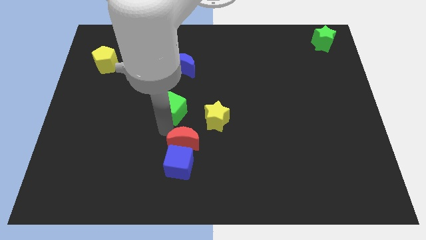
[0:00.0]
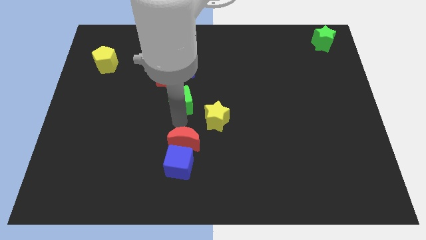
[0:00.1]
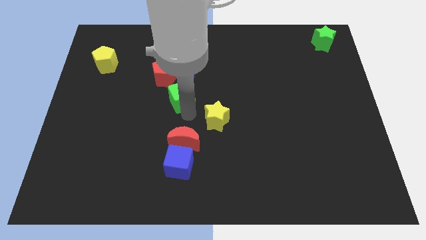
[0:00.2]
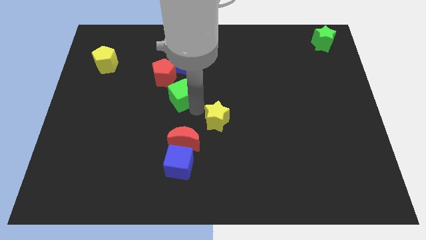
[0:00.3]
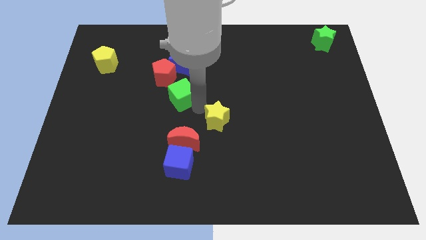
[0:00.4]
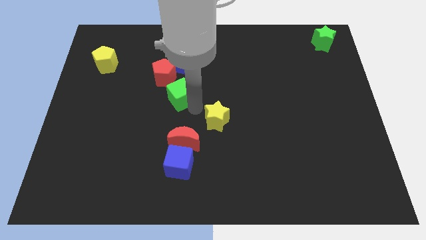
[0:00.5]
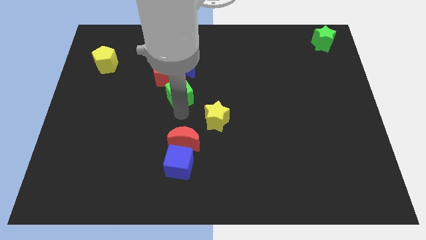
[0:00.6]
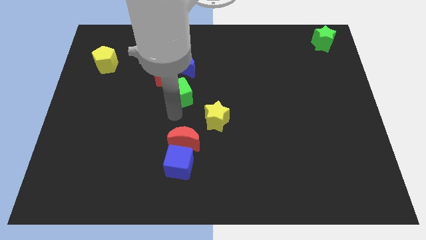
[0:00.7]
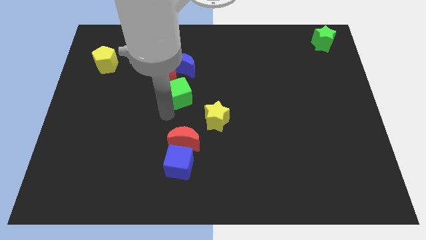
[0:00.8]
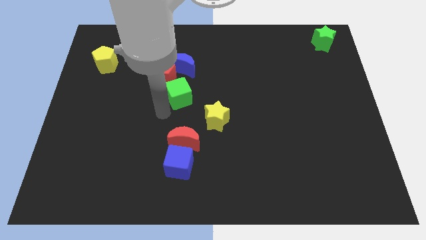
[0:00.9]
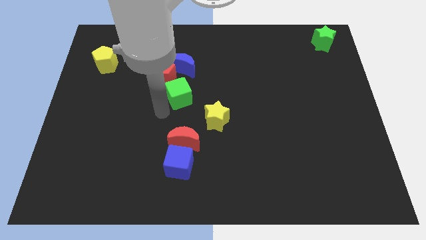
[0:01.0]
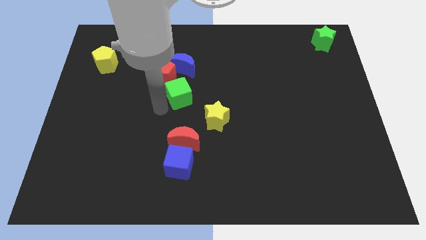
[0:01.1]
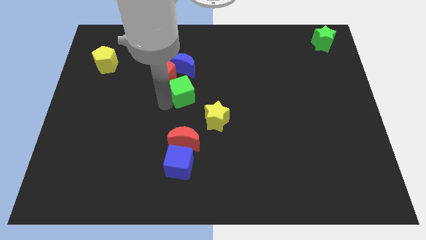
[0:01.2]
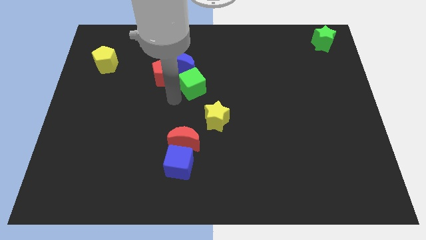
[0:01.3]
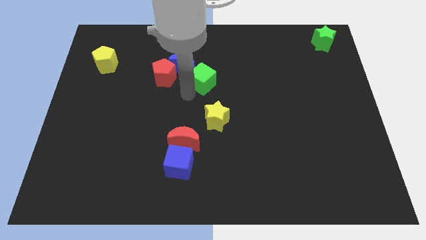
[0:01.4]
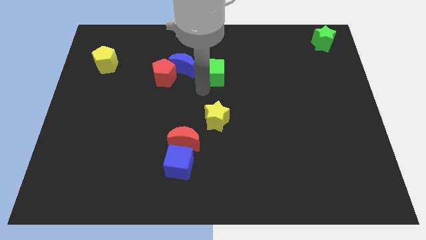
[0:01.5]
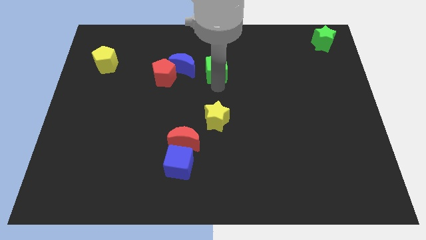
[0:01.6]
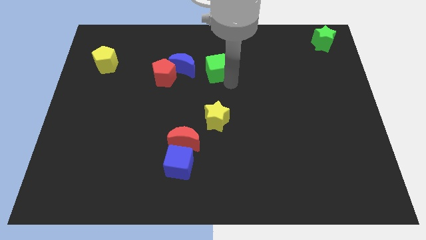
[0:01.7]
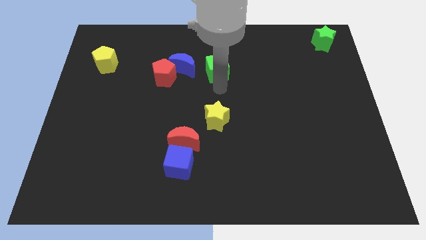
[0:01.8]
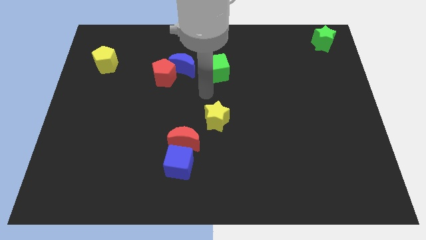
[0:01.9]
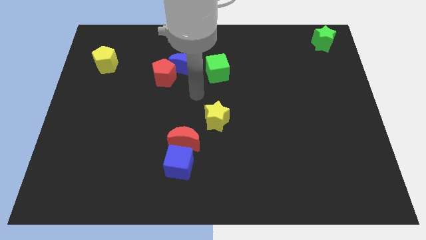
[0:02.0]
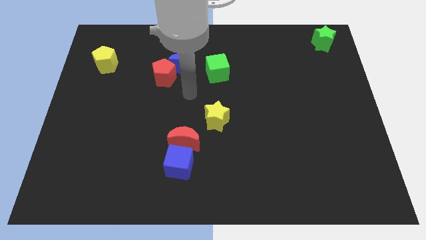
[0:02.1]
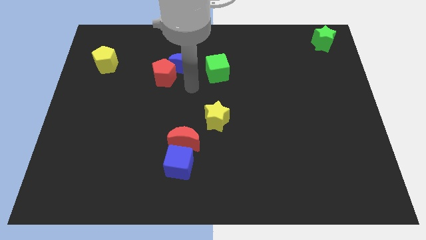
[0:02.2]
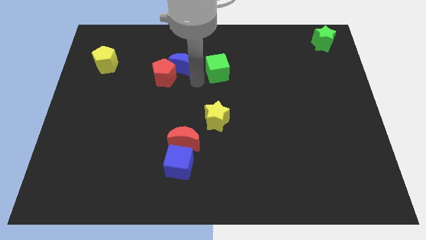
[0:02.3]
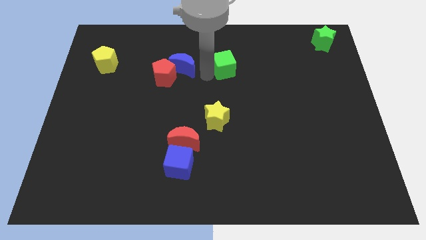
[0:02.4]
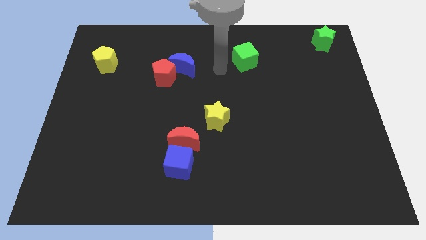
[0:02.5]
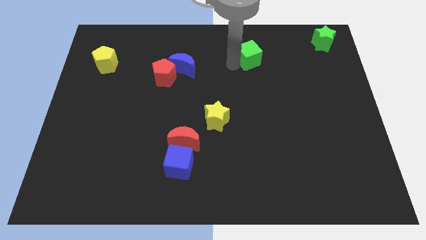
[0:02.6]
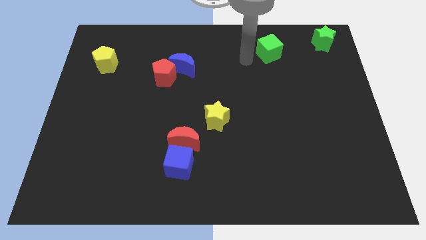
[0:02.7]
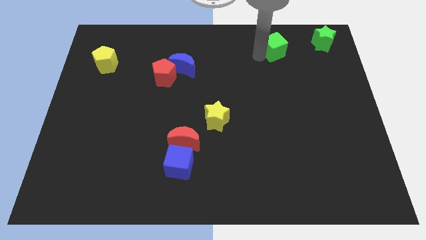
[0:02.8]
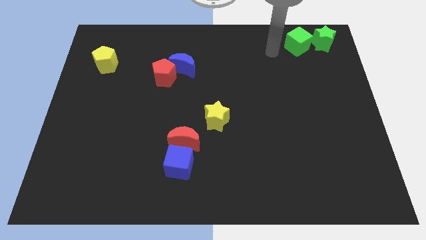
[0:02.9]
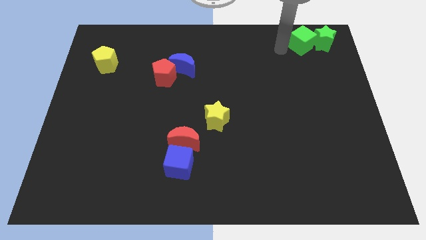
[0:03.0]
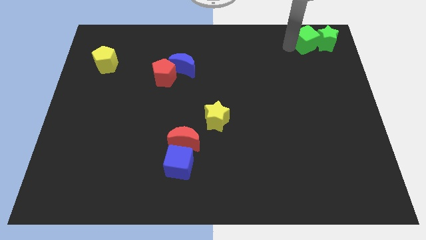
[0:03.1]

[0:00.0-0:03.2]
place the green cube left to the green star

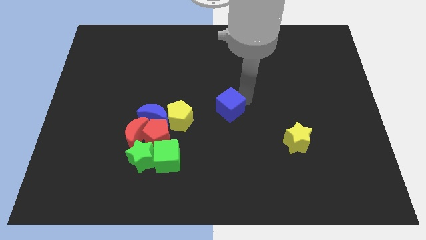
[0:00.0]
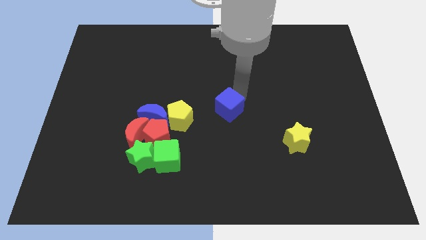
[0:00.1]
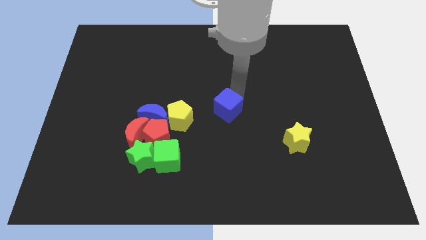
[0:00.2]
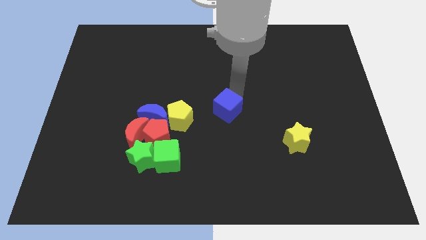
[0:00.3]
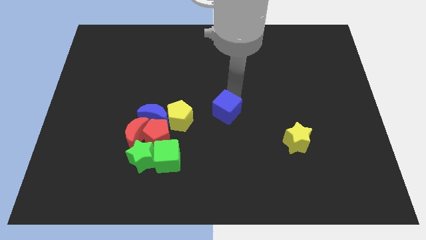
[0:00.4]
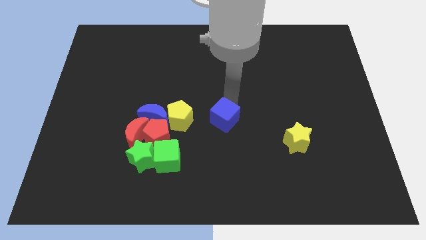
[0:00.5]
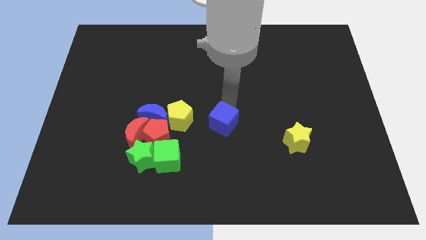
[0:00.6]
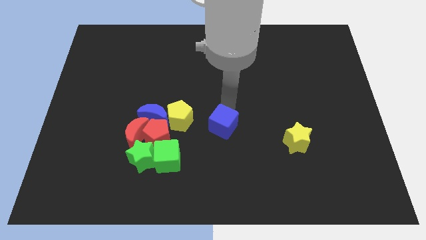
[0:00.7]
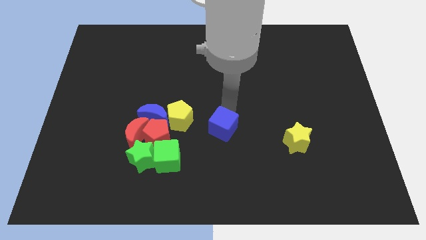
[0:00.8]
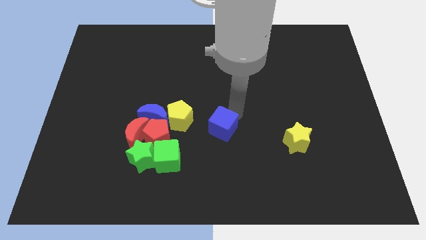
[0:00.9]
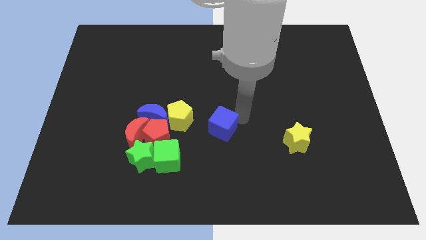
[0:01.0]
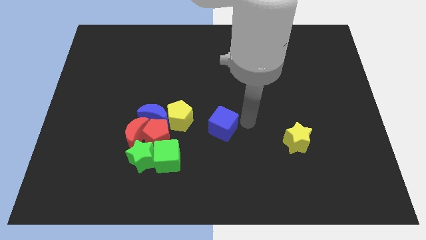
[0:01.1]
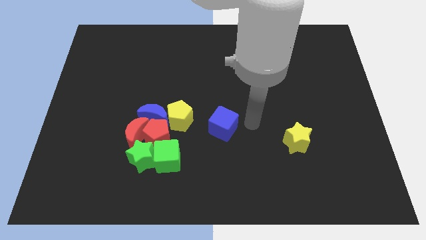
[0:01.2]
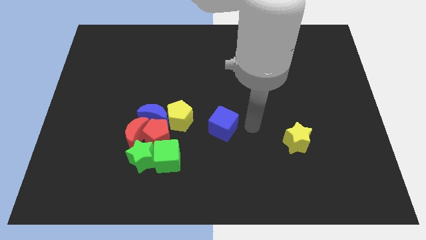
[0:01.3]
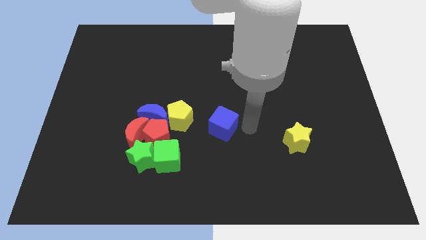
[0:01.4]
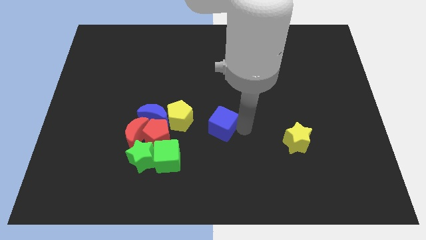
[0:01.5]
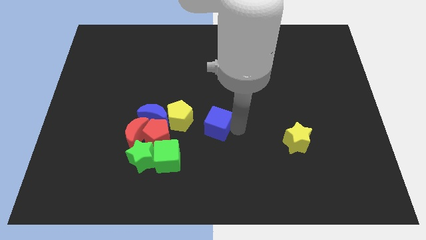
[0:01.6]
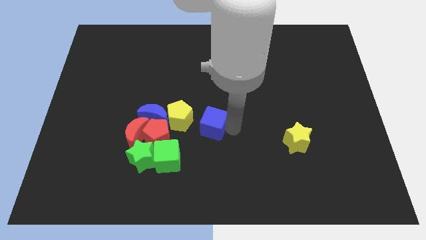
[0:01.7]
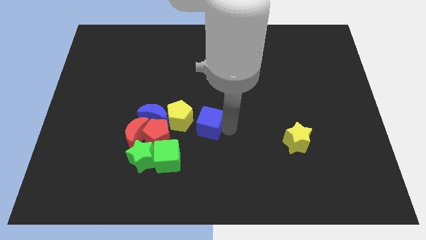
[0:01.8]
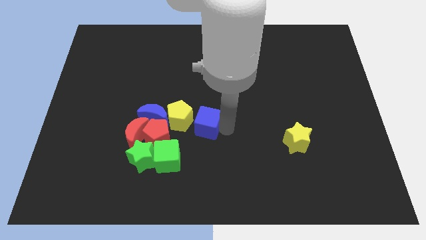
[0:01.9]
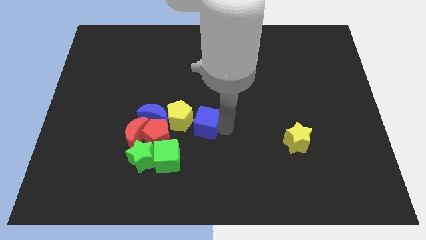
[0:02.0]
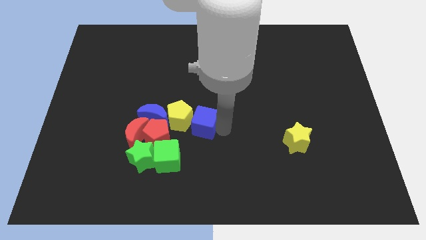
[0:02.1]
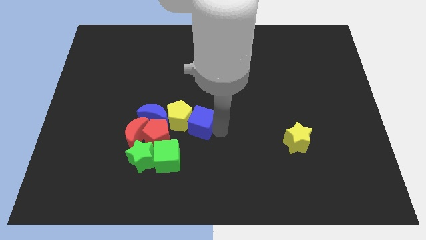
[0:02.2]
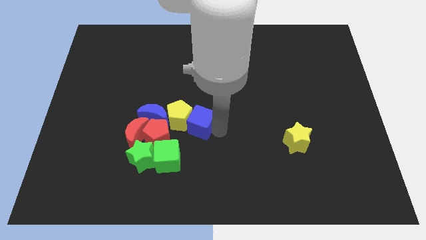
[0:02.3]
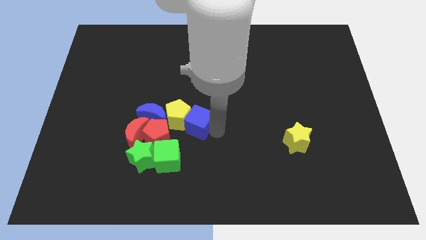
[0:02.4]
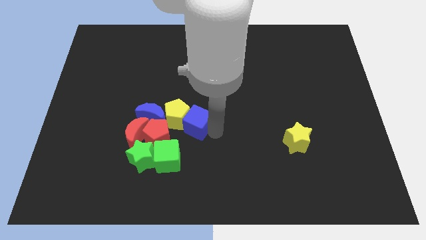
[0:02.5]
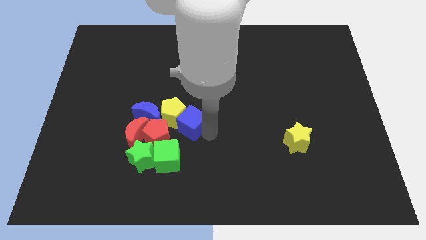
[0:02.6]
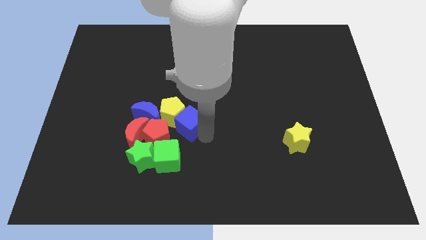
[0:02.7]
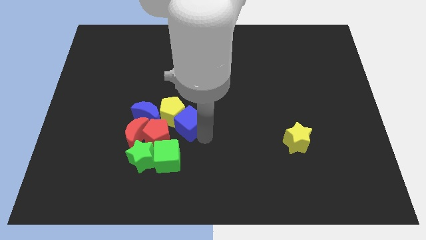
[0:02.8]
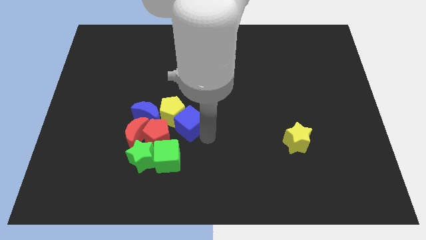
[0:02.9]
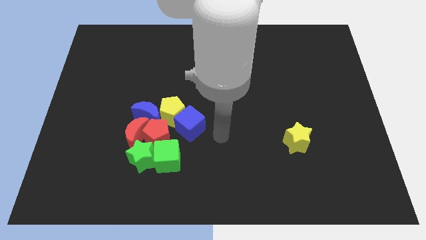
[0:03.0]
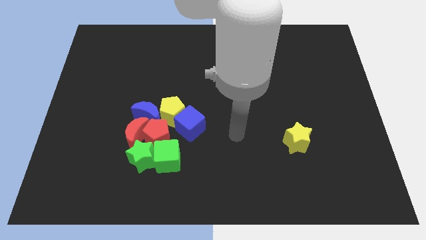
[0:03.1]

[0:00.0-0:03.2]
push the blue cube into the yellow pentagon

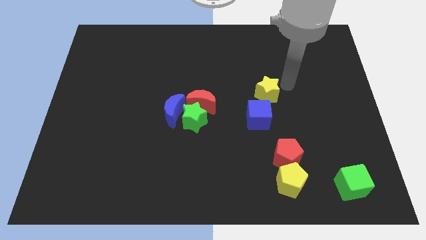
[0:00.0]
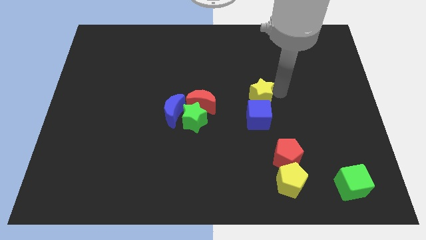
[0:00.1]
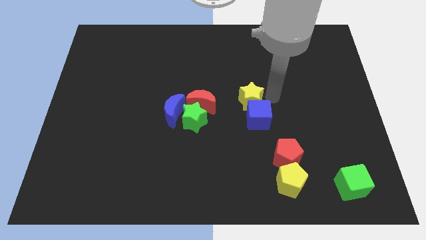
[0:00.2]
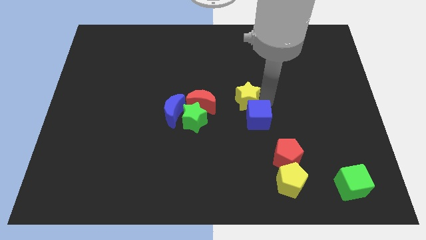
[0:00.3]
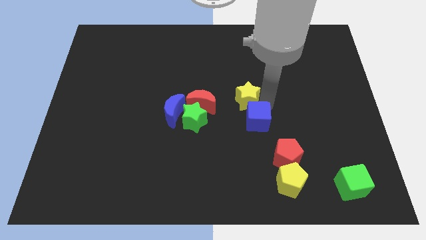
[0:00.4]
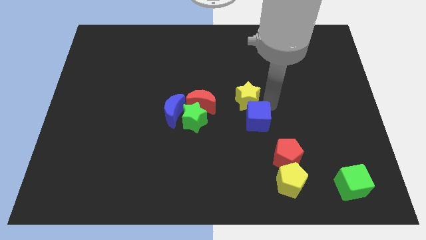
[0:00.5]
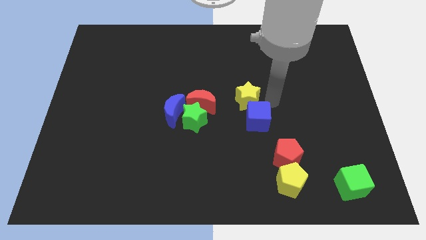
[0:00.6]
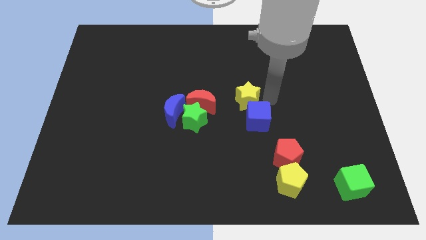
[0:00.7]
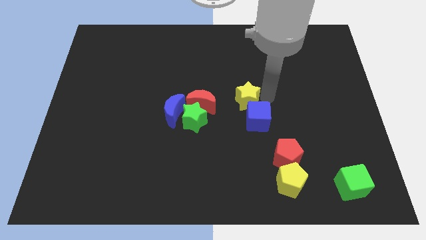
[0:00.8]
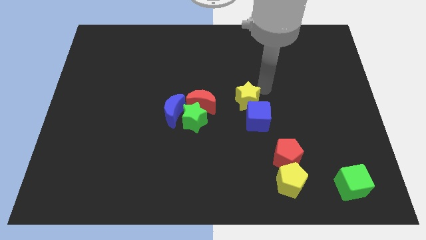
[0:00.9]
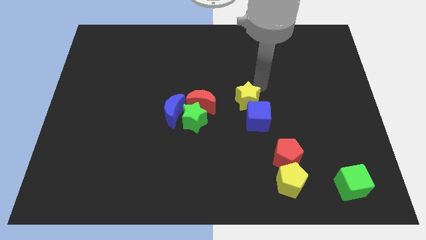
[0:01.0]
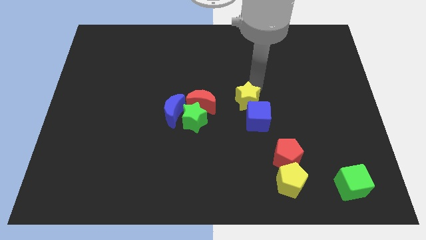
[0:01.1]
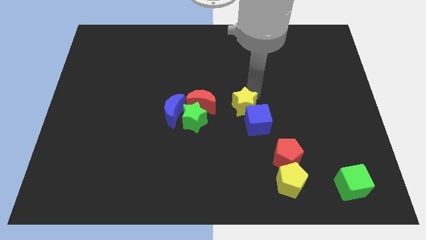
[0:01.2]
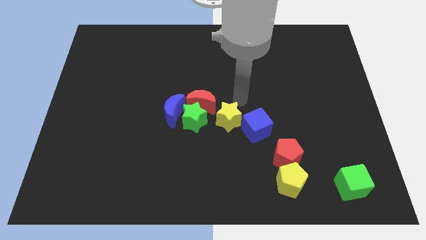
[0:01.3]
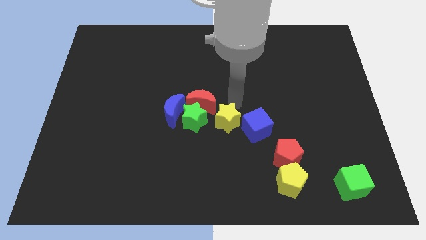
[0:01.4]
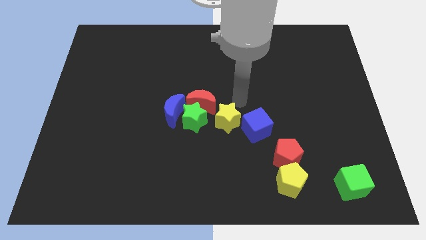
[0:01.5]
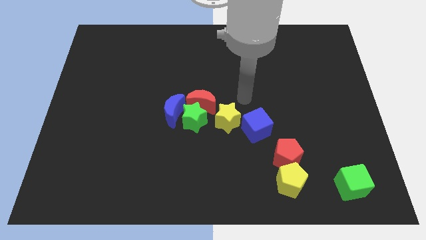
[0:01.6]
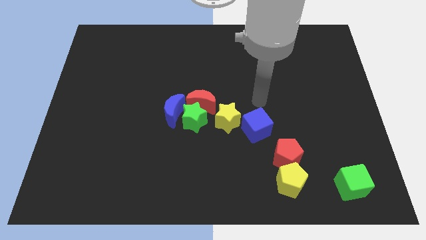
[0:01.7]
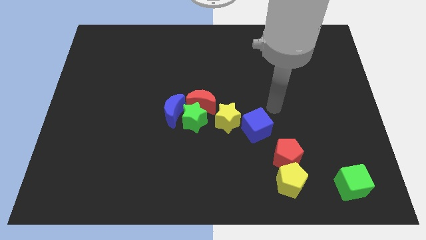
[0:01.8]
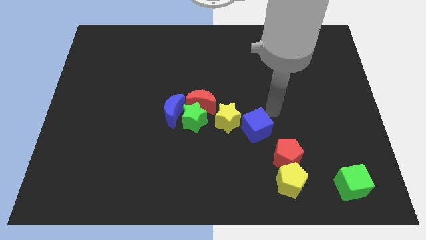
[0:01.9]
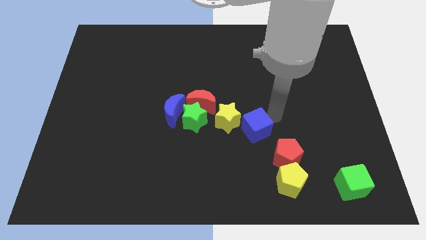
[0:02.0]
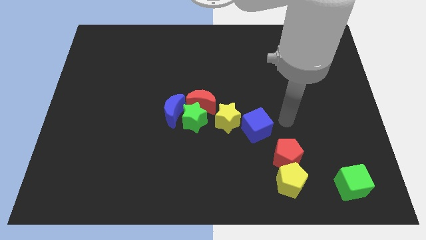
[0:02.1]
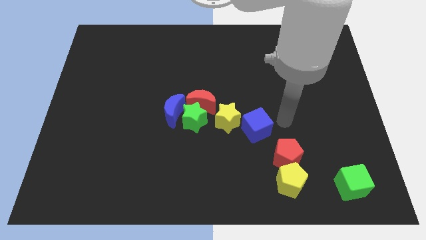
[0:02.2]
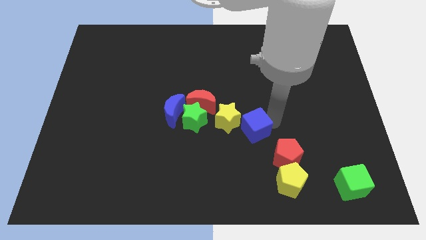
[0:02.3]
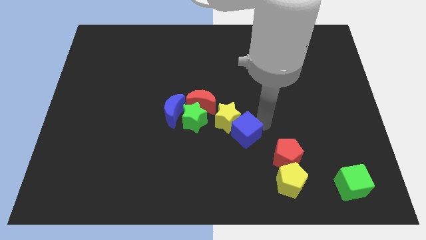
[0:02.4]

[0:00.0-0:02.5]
place the yellow star and blue cube to the right of green star

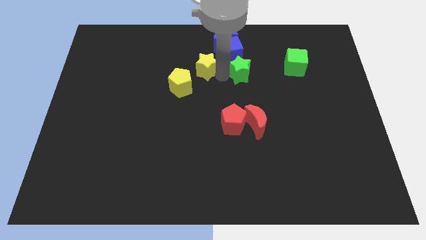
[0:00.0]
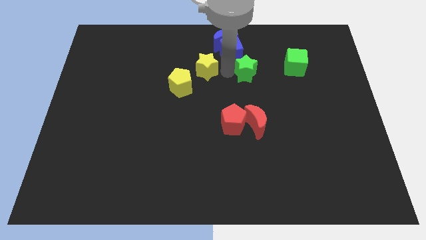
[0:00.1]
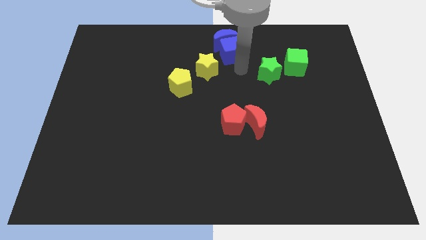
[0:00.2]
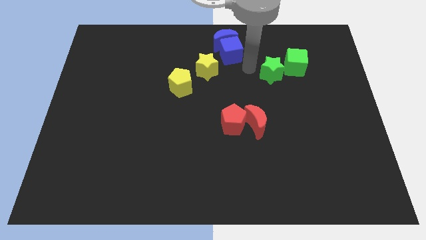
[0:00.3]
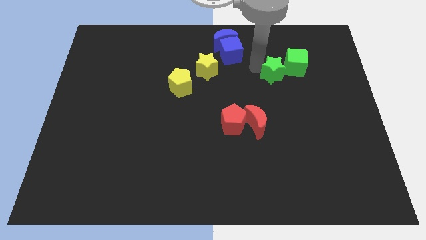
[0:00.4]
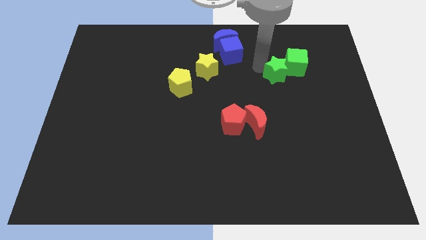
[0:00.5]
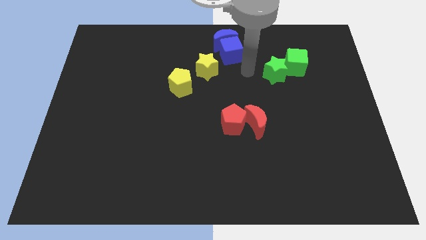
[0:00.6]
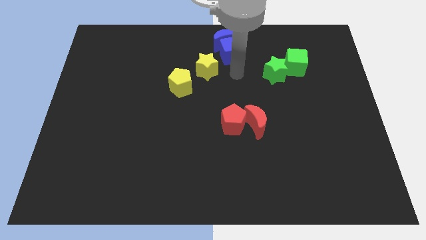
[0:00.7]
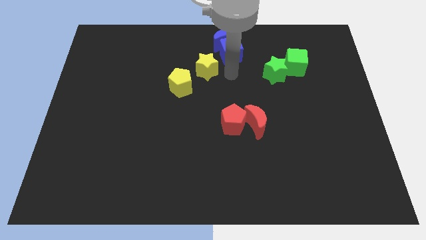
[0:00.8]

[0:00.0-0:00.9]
move the green star into the green cube
